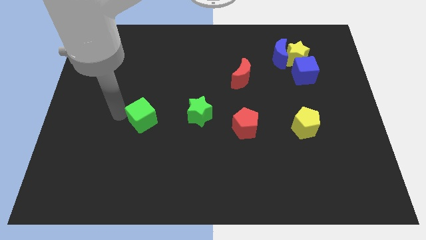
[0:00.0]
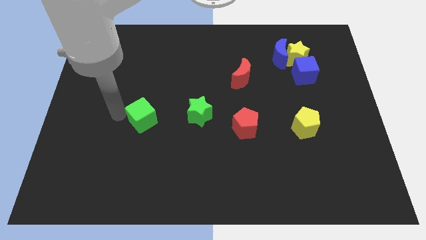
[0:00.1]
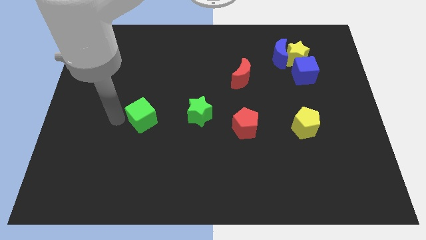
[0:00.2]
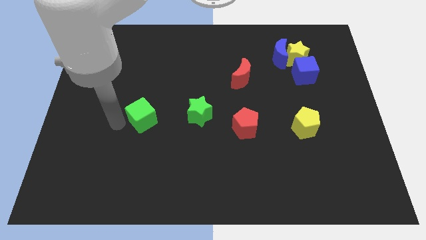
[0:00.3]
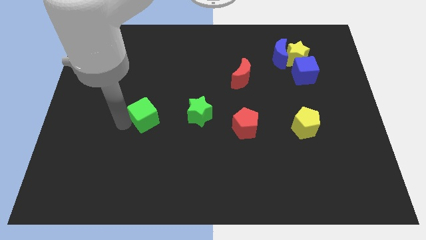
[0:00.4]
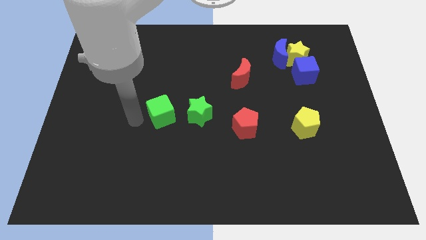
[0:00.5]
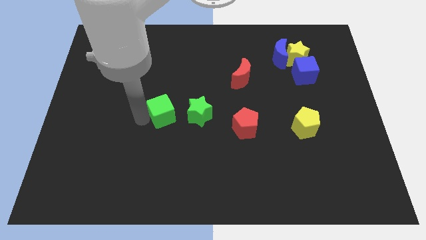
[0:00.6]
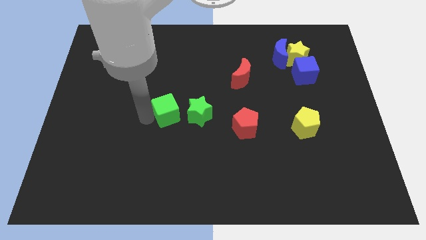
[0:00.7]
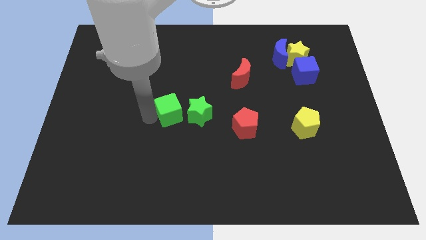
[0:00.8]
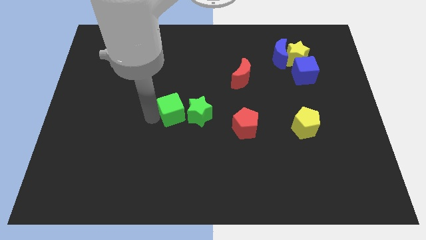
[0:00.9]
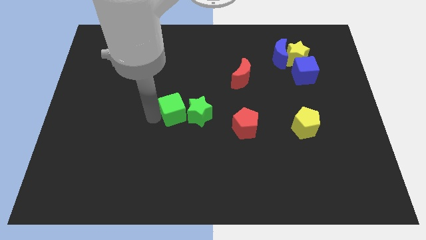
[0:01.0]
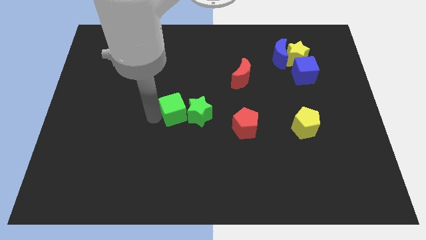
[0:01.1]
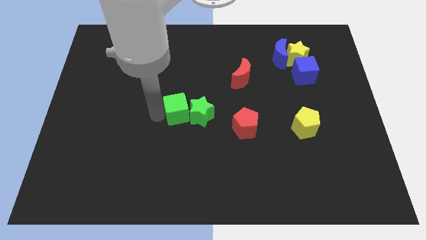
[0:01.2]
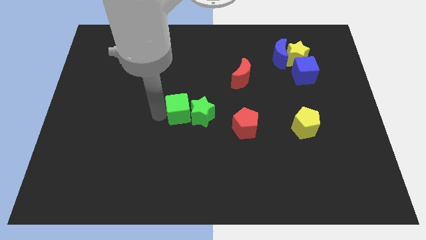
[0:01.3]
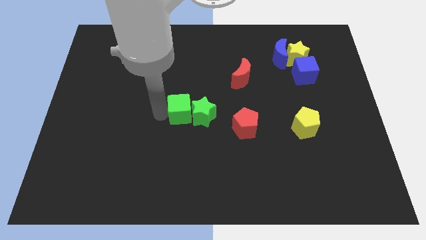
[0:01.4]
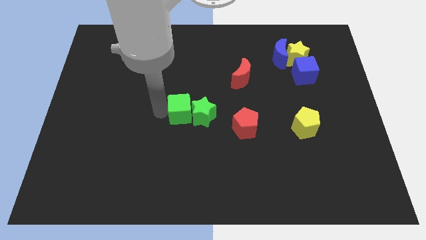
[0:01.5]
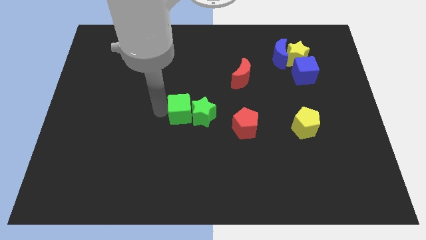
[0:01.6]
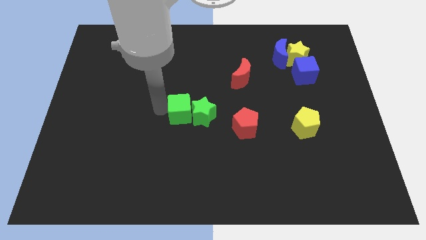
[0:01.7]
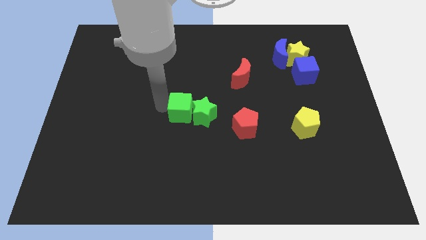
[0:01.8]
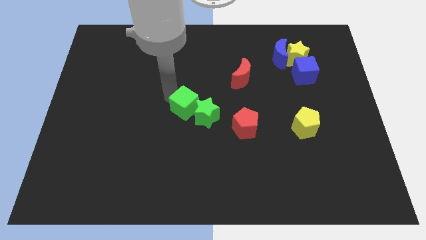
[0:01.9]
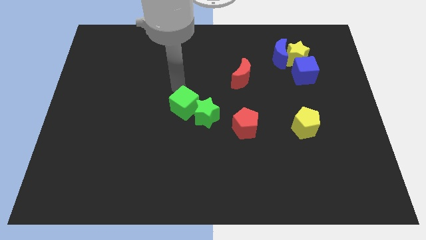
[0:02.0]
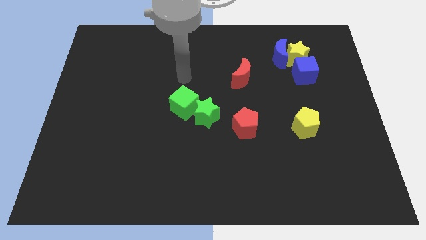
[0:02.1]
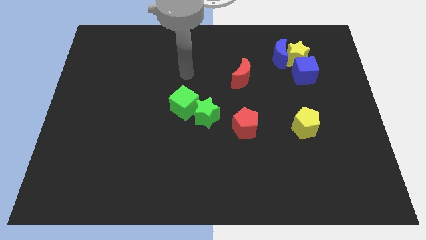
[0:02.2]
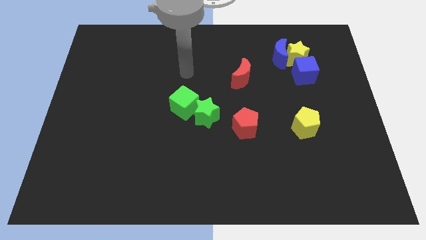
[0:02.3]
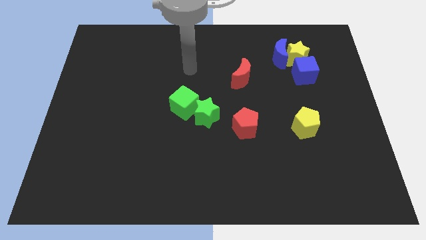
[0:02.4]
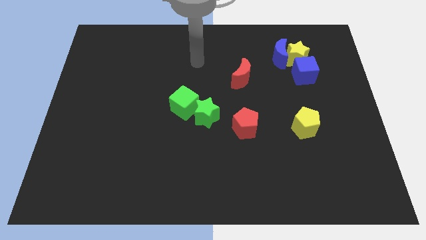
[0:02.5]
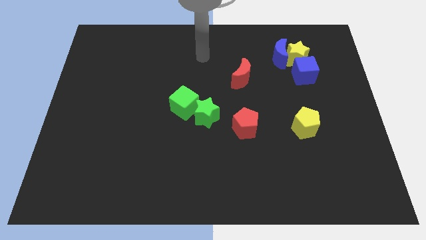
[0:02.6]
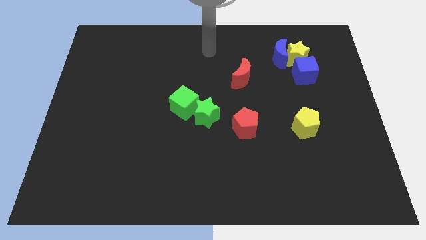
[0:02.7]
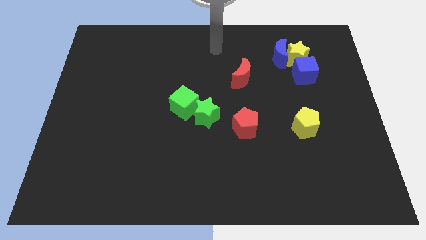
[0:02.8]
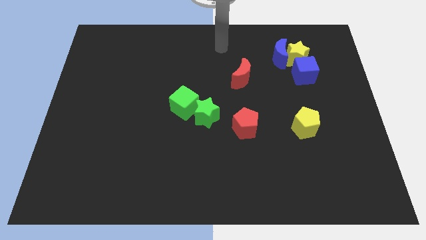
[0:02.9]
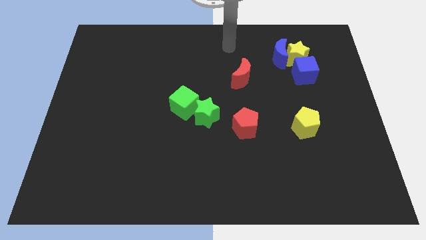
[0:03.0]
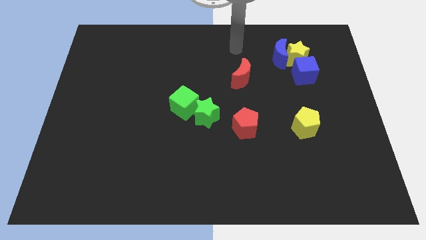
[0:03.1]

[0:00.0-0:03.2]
push the green cube into the green star

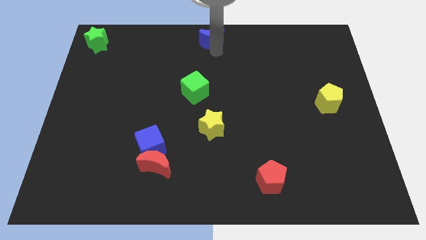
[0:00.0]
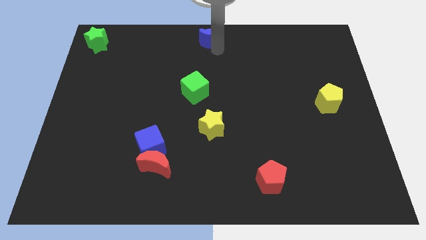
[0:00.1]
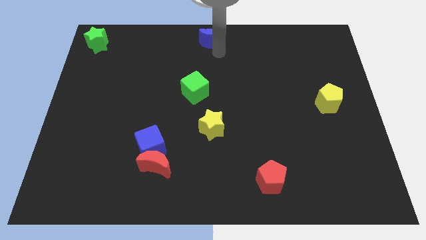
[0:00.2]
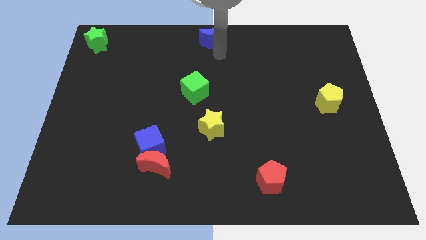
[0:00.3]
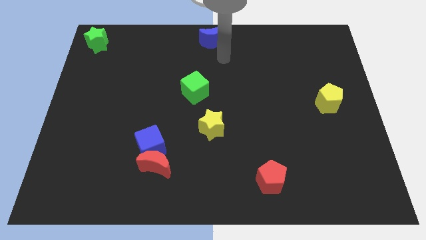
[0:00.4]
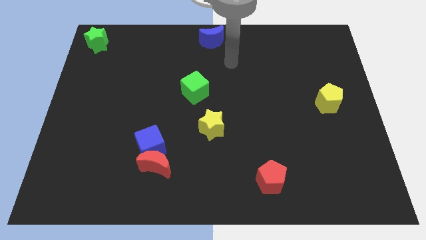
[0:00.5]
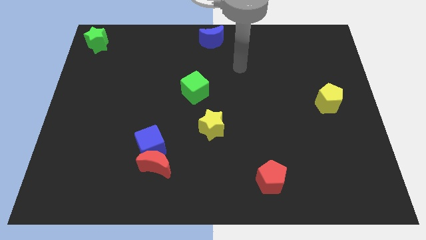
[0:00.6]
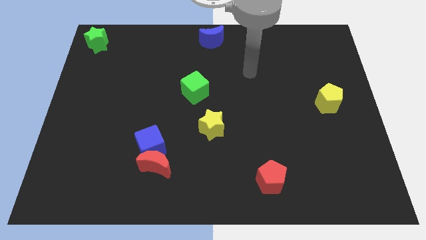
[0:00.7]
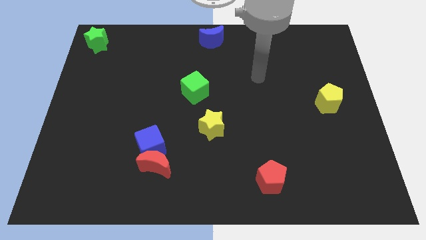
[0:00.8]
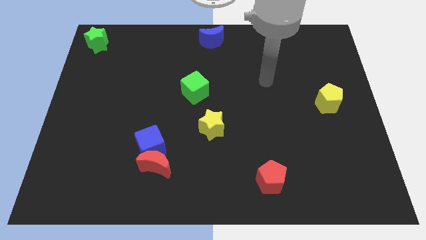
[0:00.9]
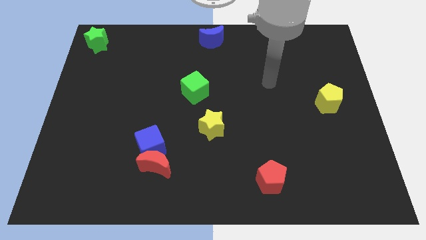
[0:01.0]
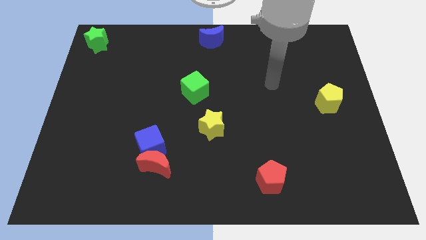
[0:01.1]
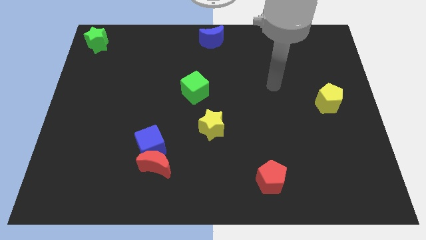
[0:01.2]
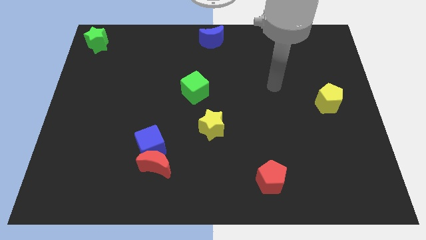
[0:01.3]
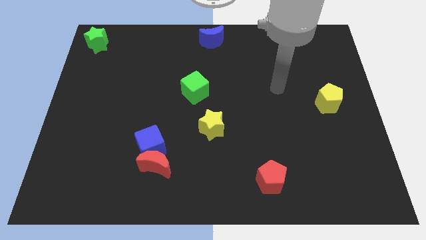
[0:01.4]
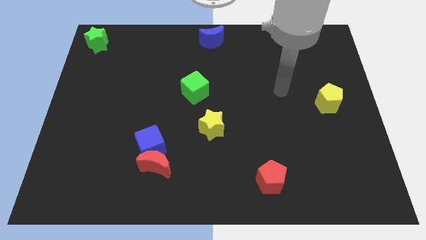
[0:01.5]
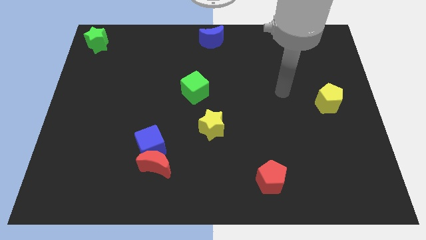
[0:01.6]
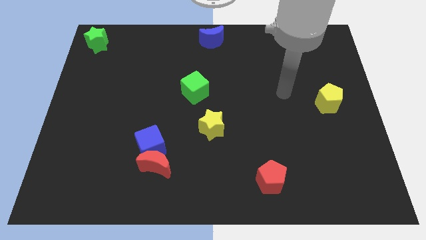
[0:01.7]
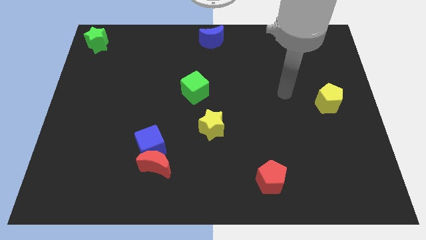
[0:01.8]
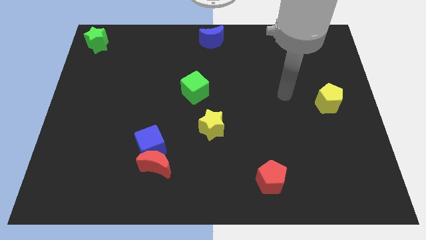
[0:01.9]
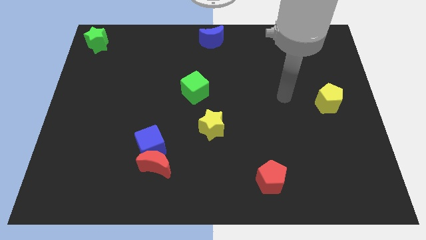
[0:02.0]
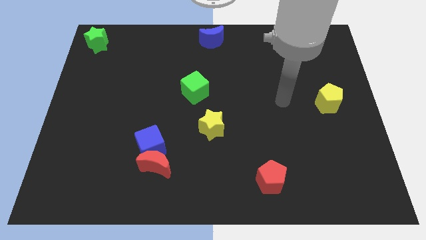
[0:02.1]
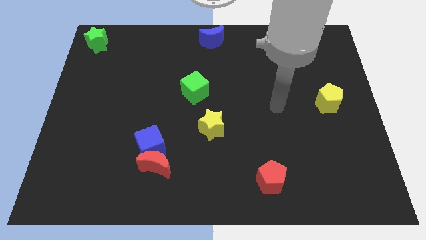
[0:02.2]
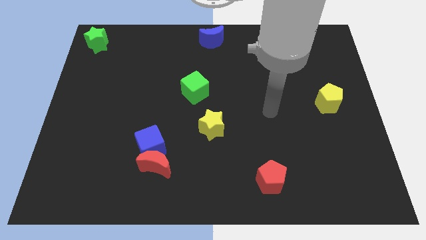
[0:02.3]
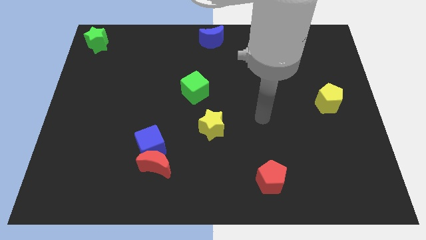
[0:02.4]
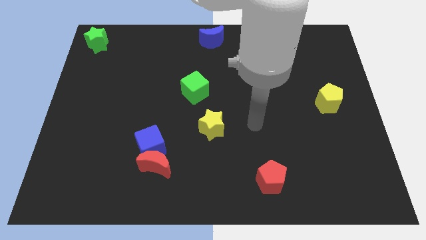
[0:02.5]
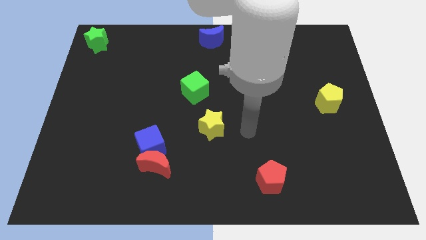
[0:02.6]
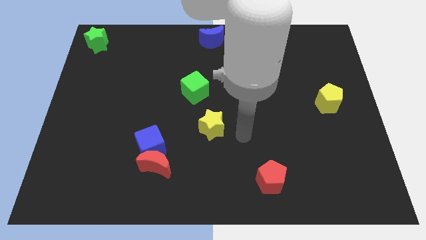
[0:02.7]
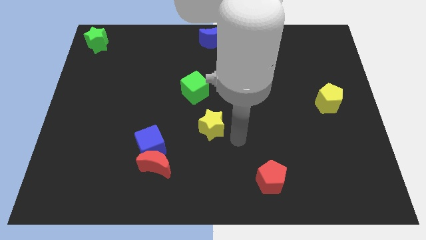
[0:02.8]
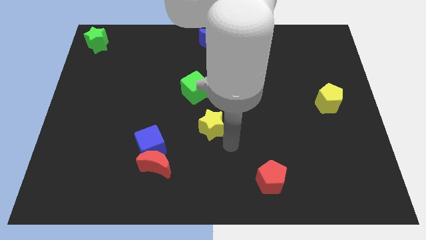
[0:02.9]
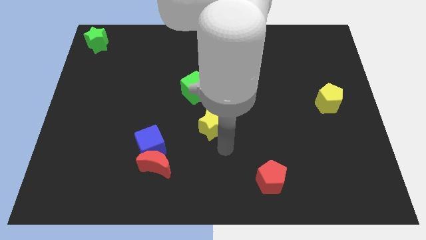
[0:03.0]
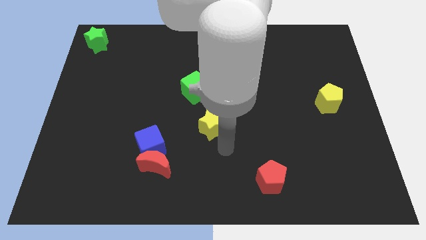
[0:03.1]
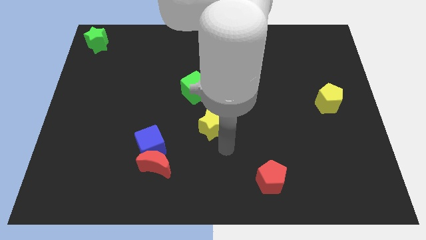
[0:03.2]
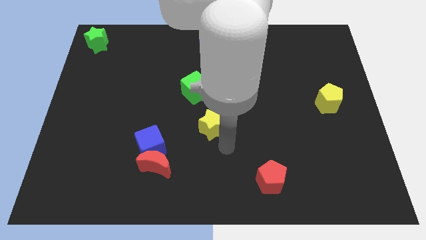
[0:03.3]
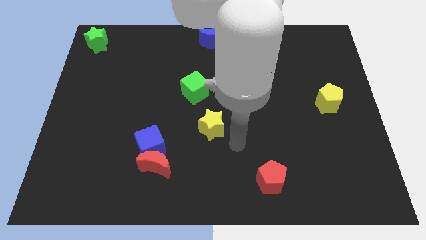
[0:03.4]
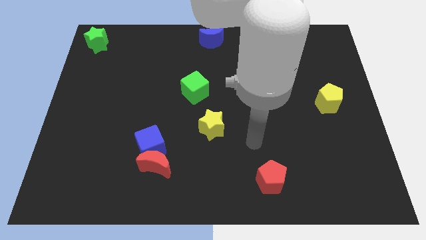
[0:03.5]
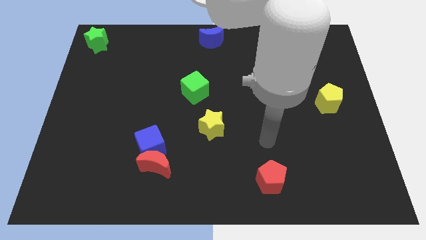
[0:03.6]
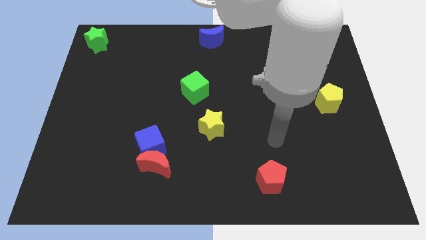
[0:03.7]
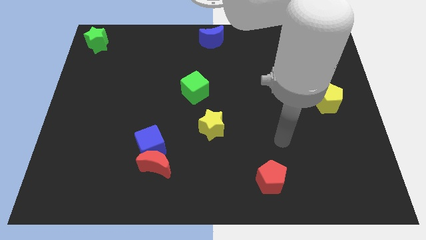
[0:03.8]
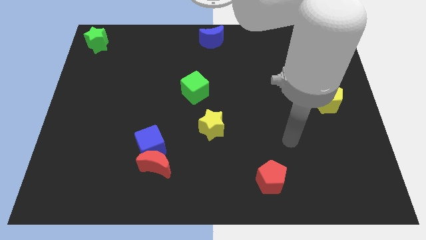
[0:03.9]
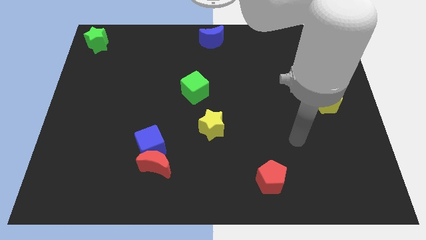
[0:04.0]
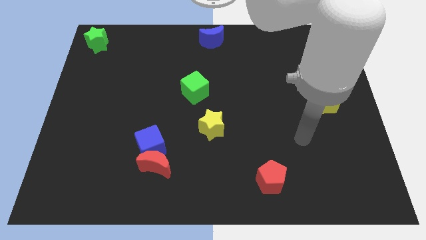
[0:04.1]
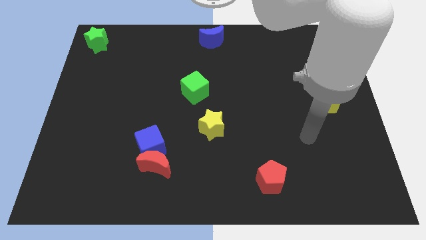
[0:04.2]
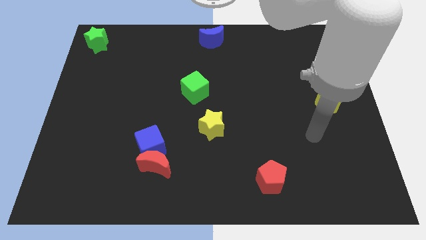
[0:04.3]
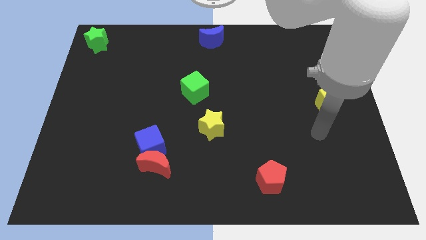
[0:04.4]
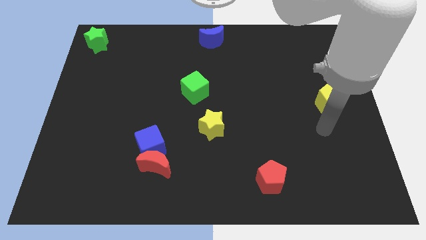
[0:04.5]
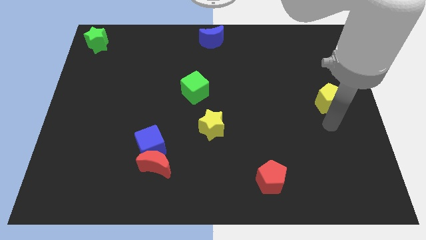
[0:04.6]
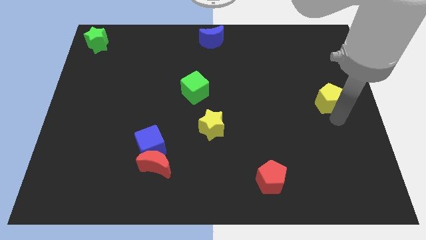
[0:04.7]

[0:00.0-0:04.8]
arm moving from blue moon to yellow pentagon

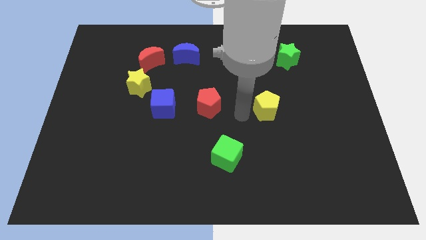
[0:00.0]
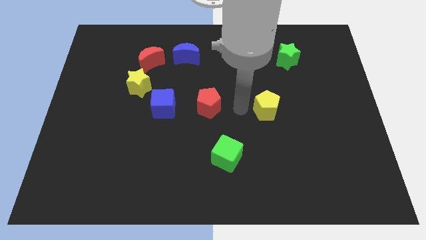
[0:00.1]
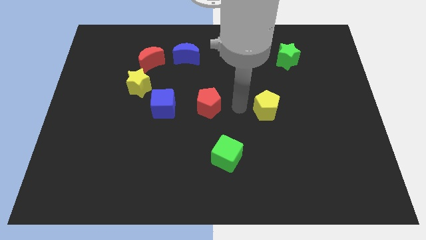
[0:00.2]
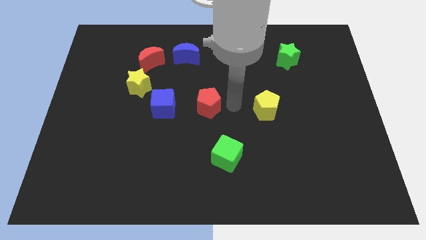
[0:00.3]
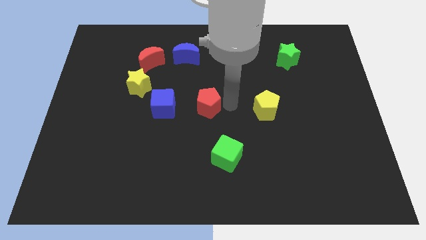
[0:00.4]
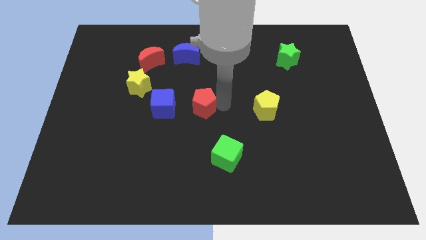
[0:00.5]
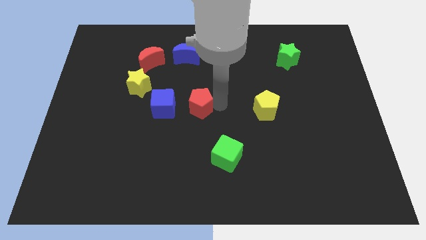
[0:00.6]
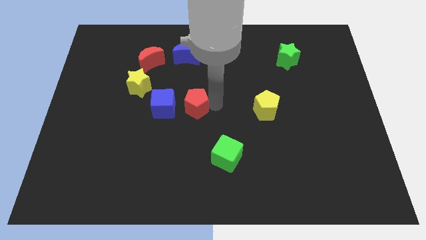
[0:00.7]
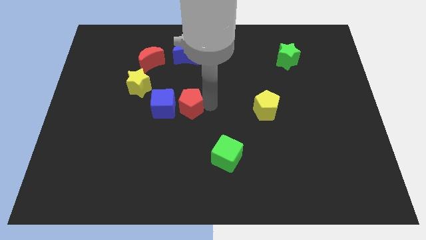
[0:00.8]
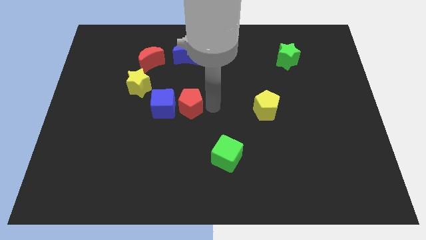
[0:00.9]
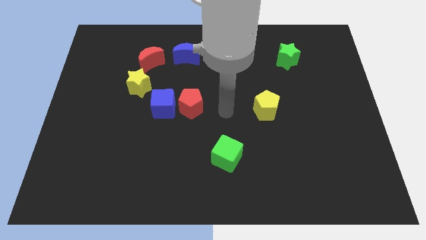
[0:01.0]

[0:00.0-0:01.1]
move the red pentagon towards the right side of the blue cube
